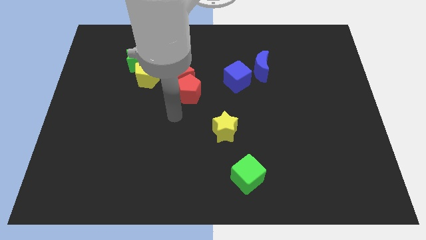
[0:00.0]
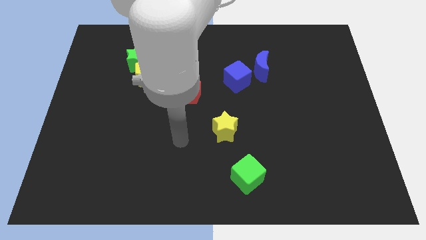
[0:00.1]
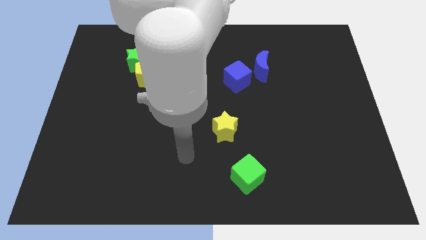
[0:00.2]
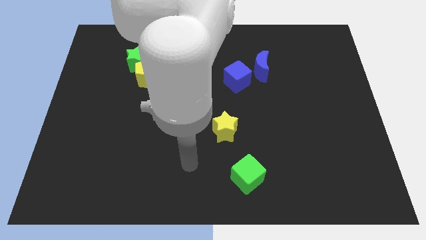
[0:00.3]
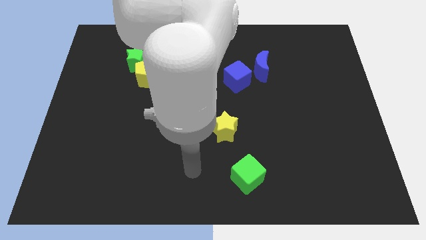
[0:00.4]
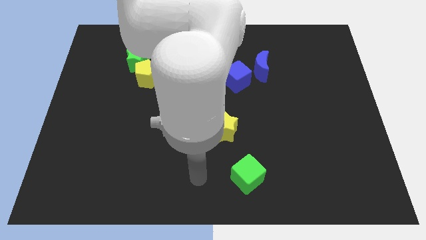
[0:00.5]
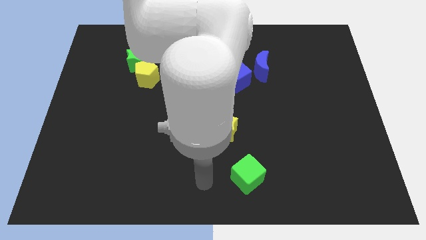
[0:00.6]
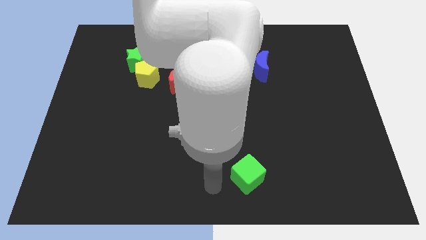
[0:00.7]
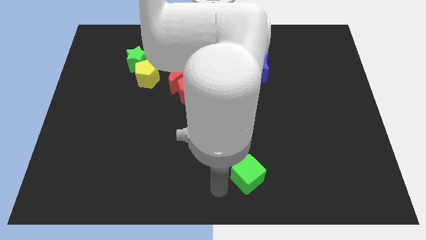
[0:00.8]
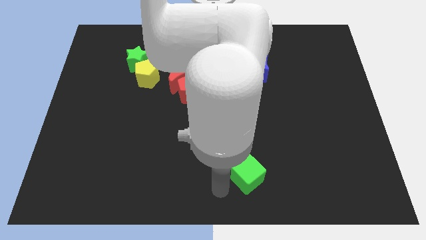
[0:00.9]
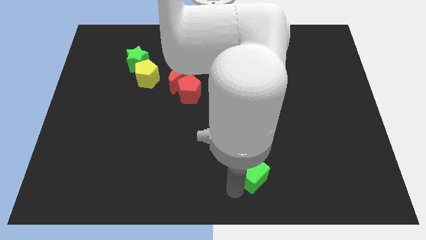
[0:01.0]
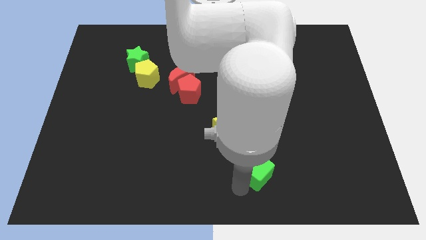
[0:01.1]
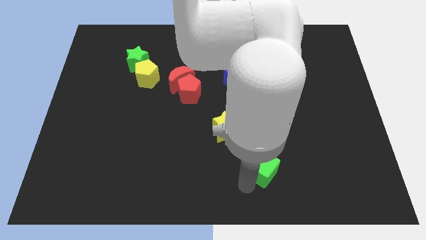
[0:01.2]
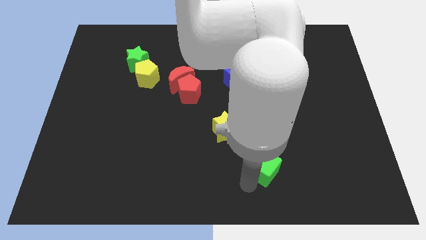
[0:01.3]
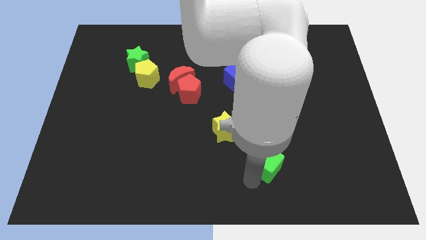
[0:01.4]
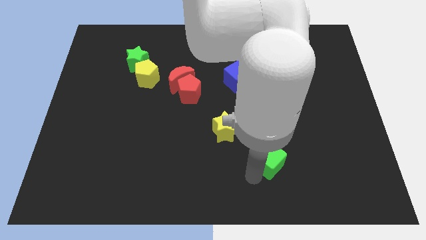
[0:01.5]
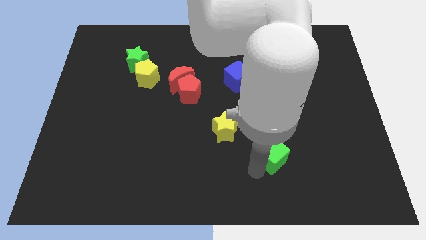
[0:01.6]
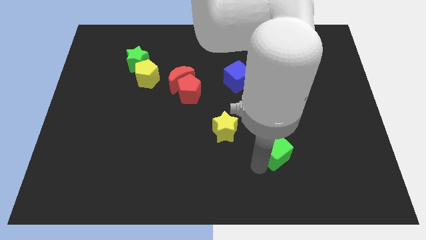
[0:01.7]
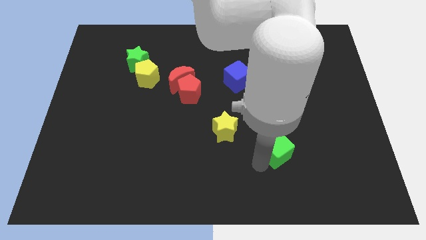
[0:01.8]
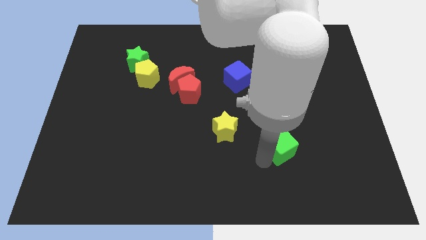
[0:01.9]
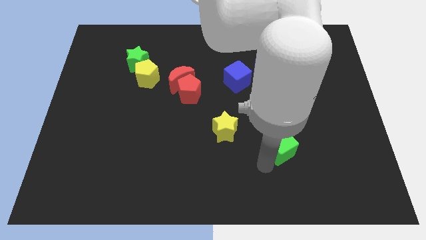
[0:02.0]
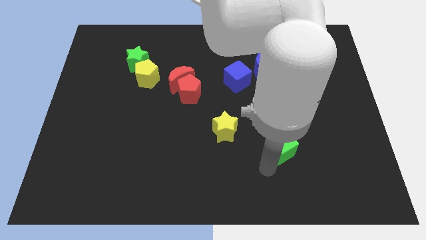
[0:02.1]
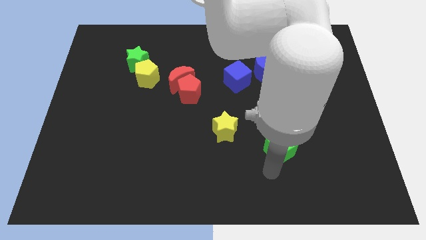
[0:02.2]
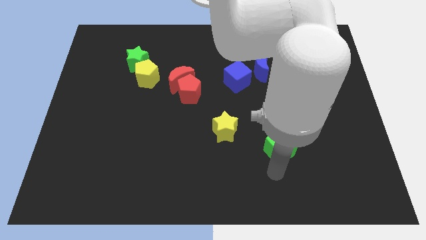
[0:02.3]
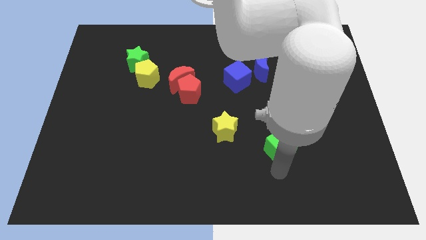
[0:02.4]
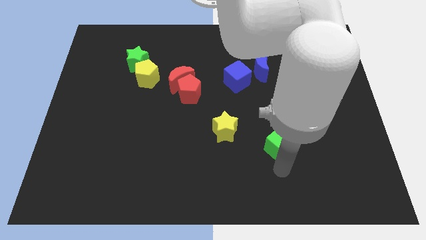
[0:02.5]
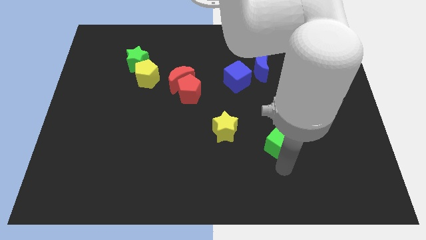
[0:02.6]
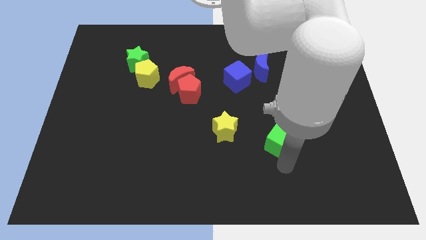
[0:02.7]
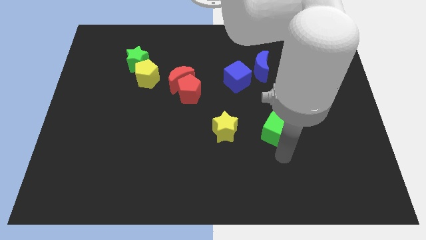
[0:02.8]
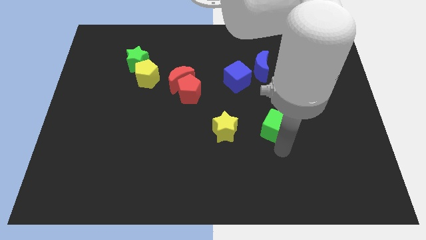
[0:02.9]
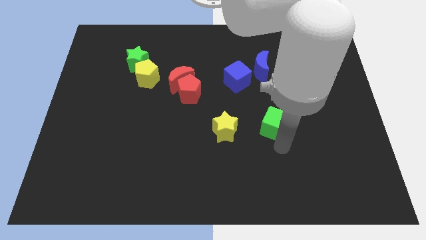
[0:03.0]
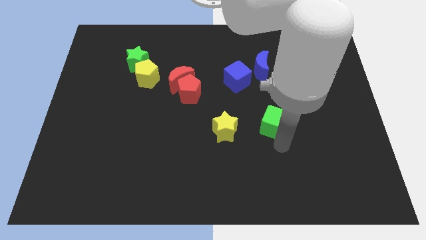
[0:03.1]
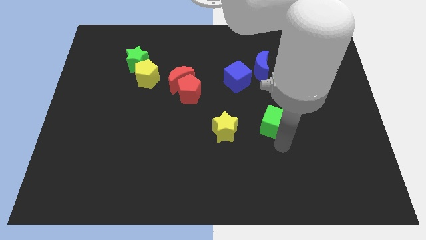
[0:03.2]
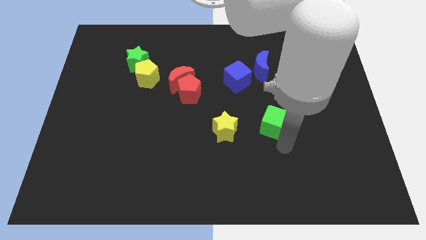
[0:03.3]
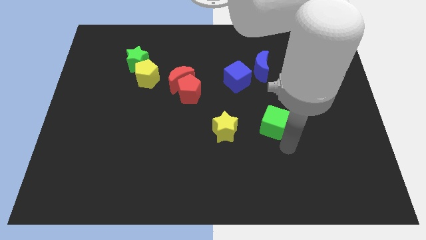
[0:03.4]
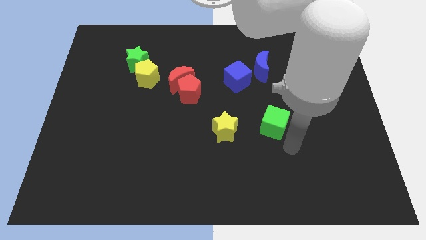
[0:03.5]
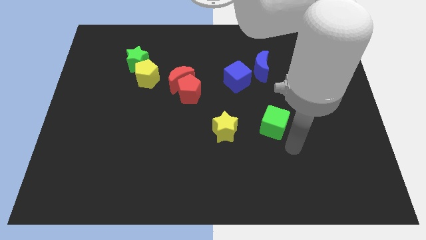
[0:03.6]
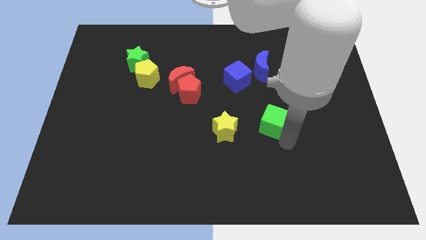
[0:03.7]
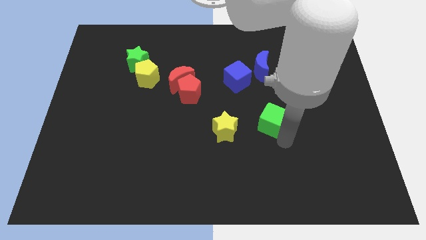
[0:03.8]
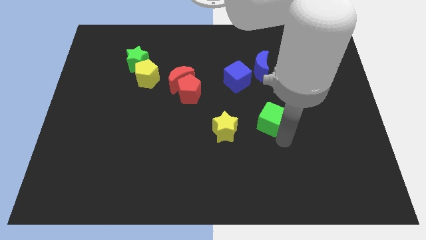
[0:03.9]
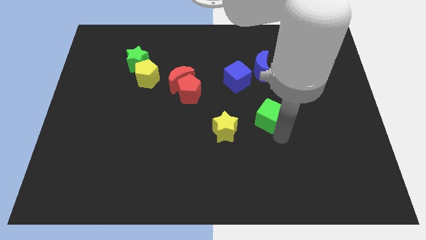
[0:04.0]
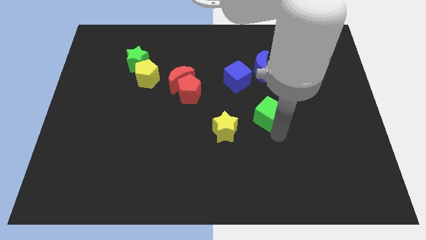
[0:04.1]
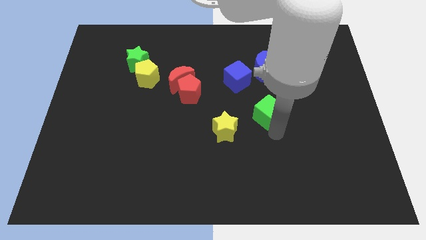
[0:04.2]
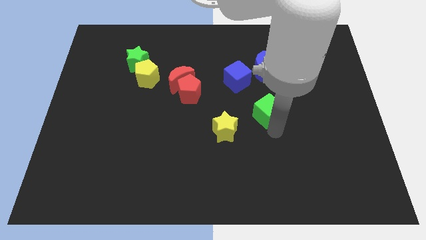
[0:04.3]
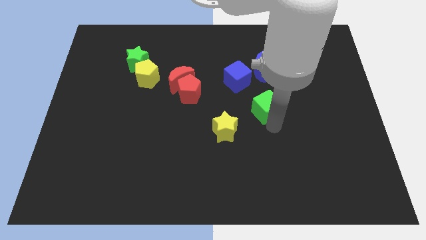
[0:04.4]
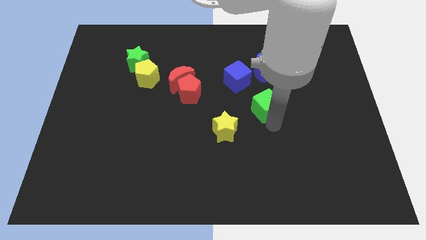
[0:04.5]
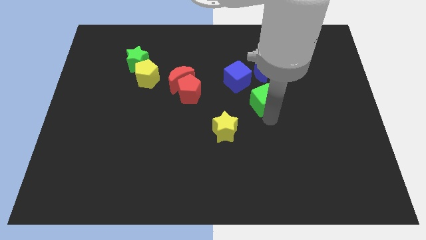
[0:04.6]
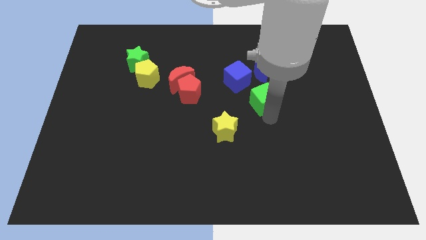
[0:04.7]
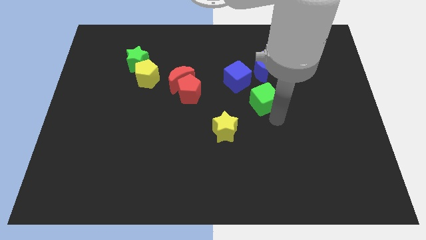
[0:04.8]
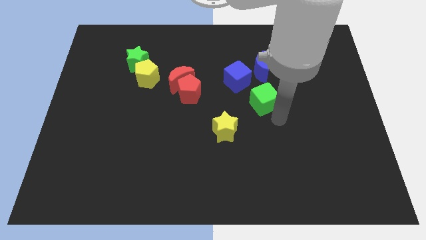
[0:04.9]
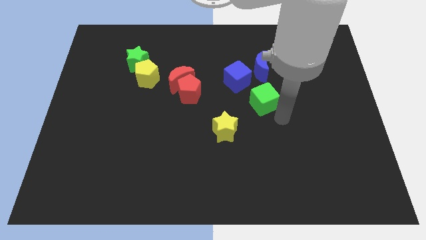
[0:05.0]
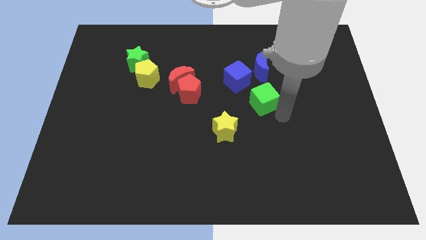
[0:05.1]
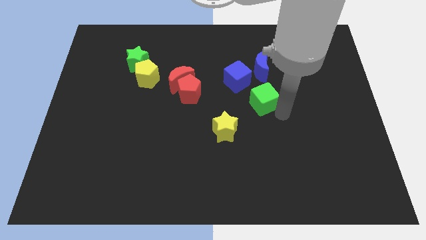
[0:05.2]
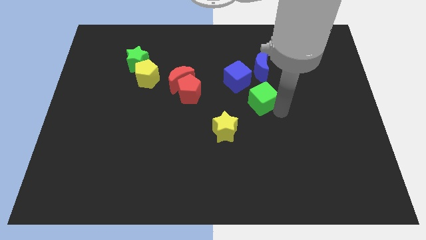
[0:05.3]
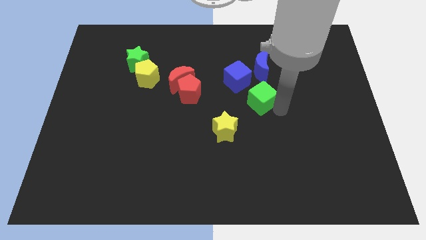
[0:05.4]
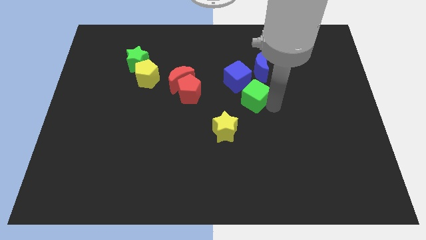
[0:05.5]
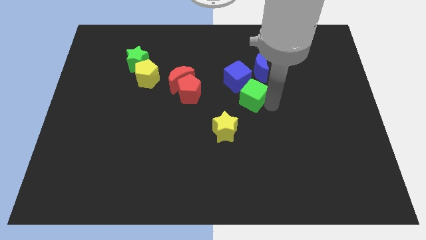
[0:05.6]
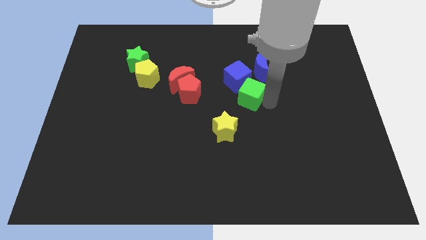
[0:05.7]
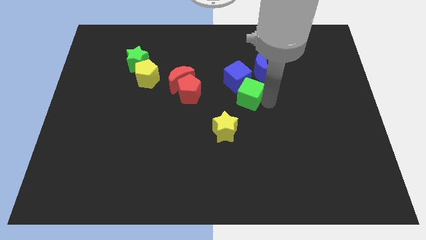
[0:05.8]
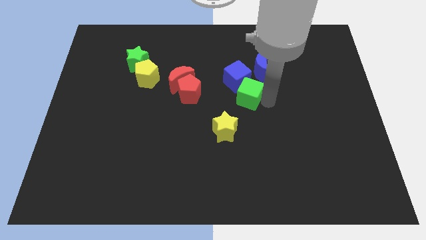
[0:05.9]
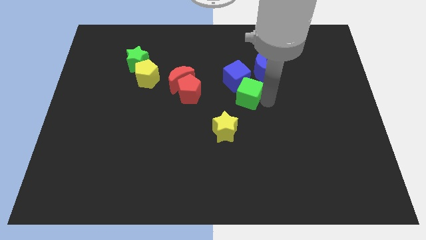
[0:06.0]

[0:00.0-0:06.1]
move the green cube towards the blue cube

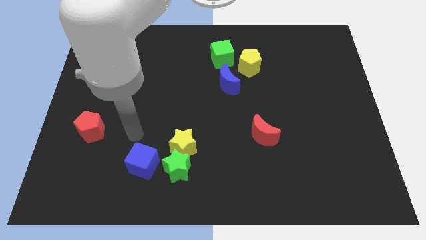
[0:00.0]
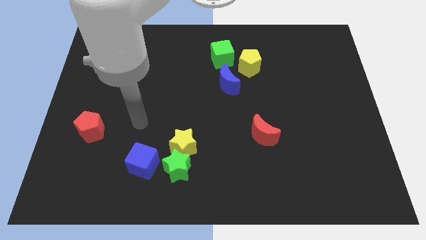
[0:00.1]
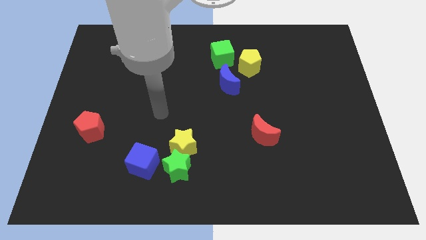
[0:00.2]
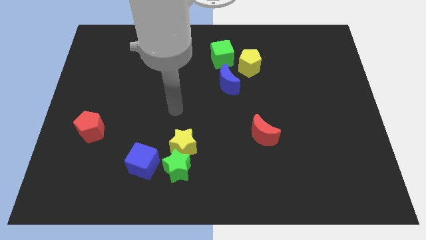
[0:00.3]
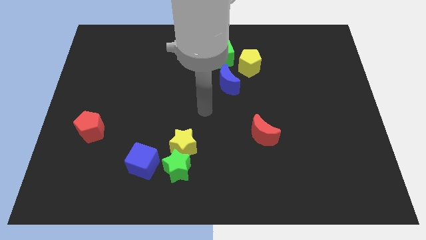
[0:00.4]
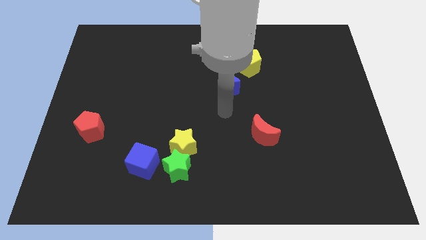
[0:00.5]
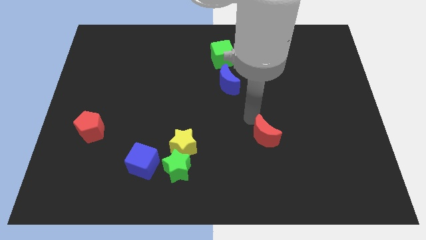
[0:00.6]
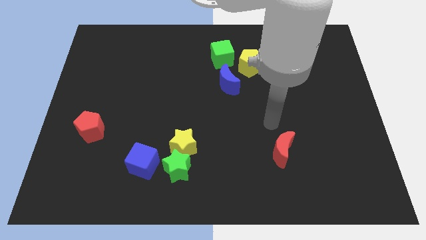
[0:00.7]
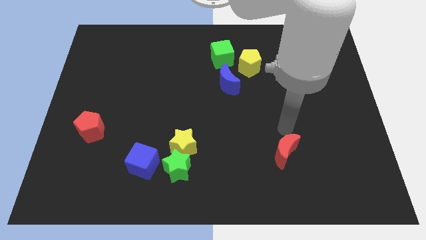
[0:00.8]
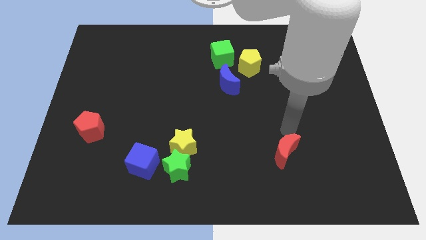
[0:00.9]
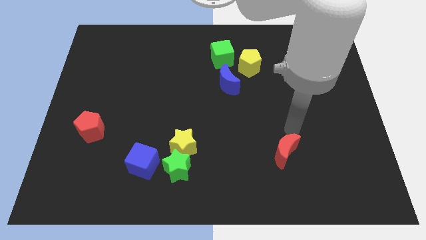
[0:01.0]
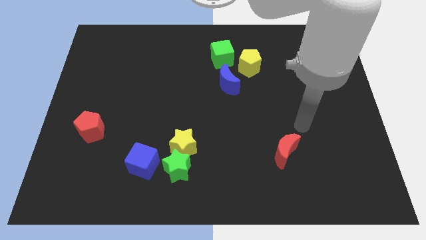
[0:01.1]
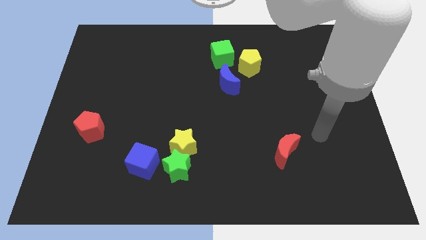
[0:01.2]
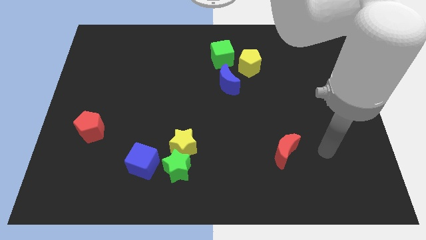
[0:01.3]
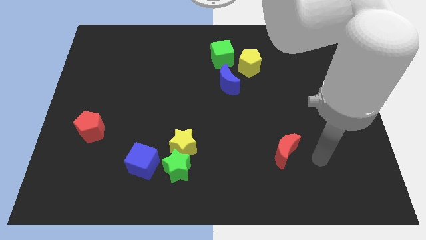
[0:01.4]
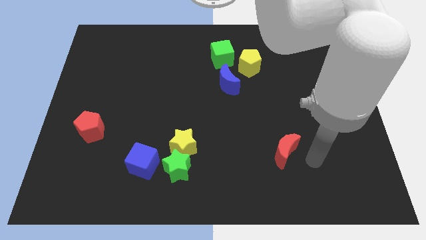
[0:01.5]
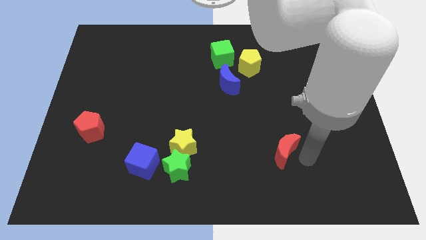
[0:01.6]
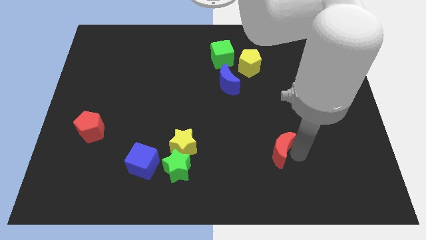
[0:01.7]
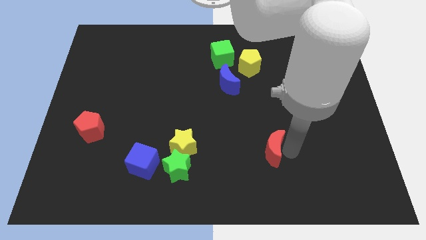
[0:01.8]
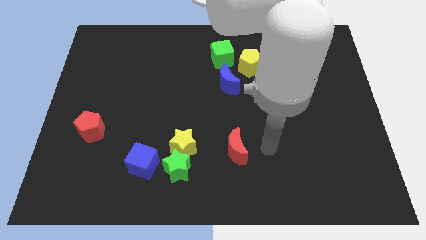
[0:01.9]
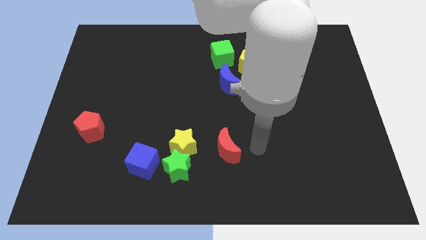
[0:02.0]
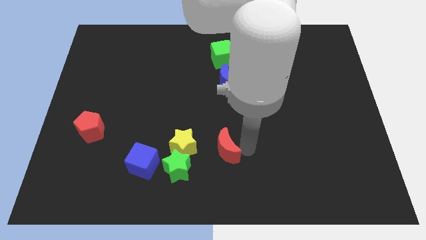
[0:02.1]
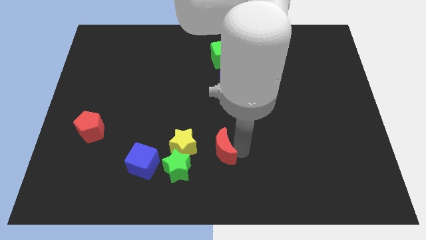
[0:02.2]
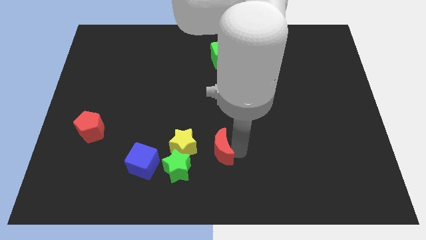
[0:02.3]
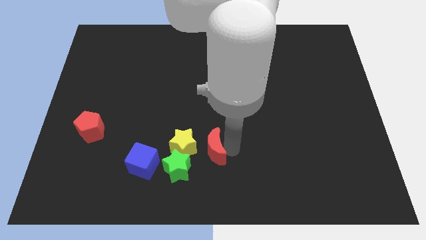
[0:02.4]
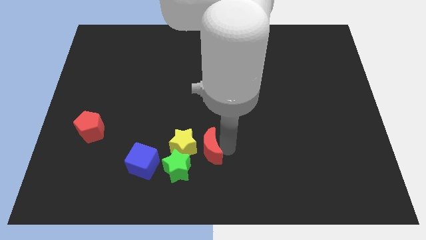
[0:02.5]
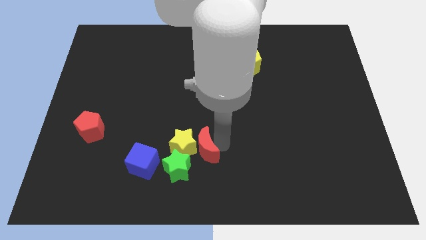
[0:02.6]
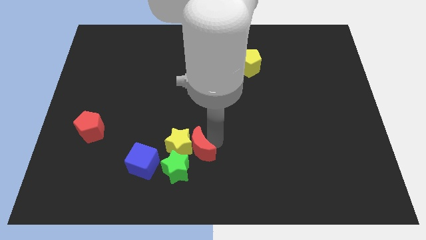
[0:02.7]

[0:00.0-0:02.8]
put the red moon to the yellow star
